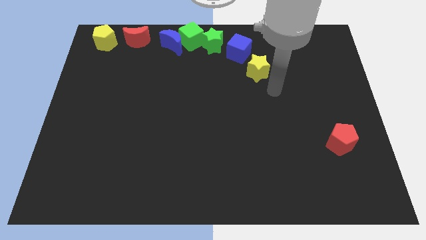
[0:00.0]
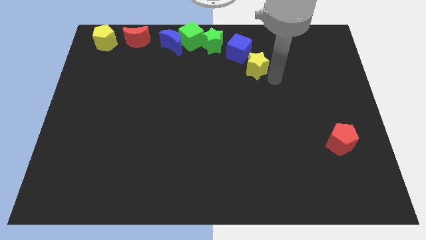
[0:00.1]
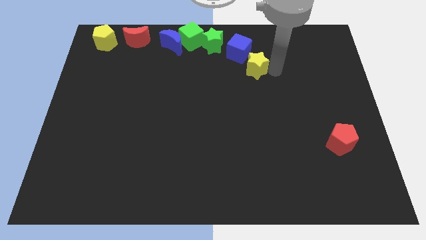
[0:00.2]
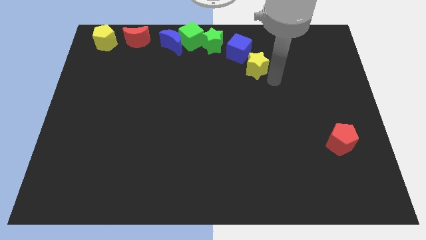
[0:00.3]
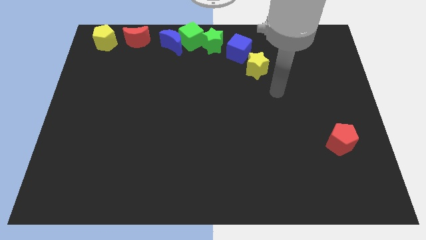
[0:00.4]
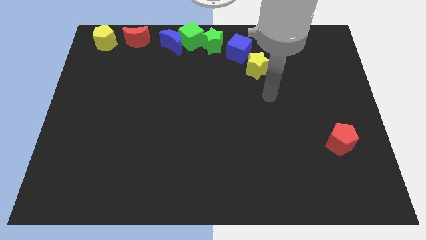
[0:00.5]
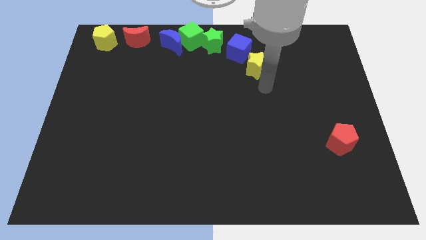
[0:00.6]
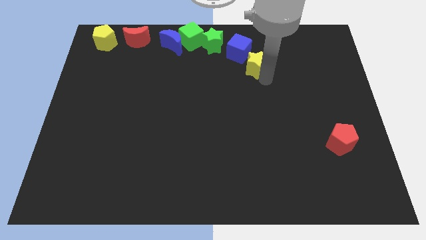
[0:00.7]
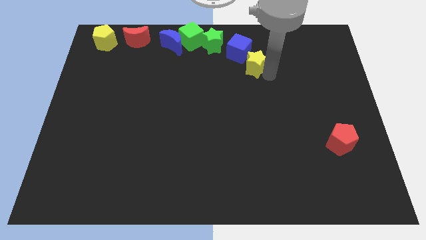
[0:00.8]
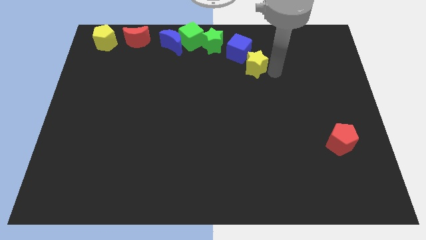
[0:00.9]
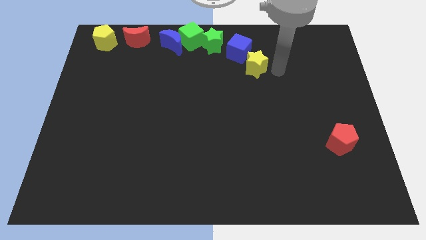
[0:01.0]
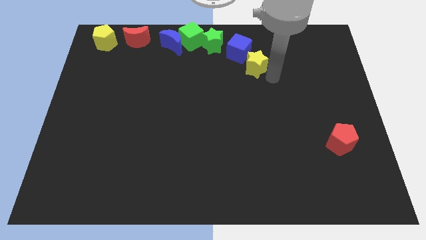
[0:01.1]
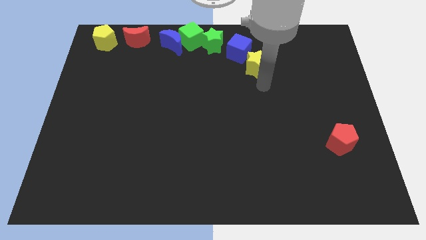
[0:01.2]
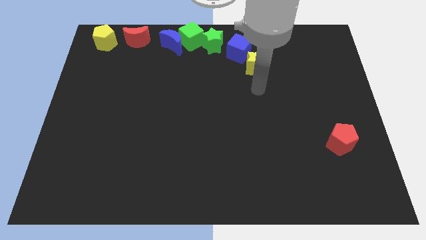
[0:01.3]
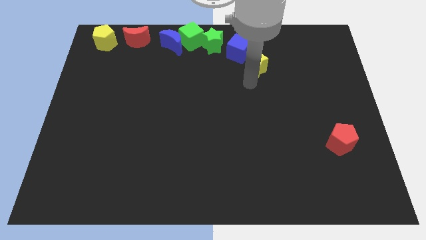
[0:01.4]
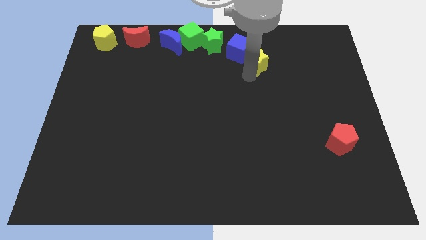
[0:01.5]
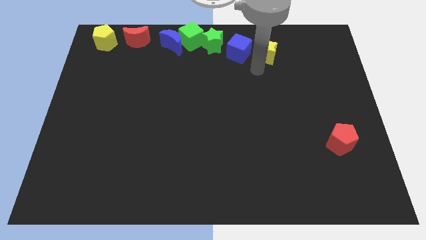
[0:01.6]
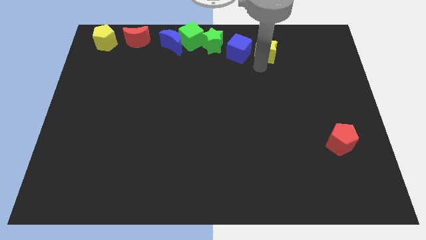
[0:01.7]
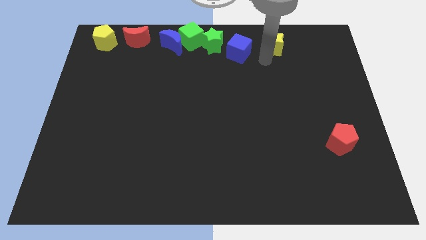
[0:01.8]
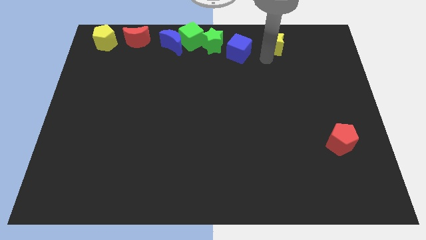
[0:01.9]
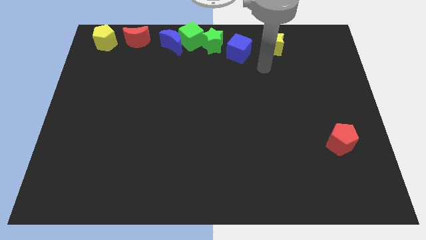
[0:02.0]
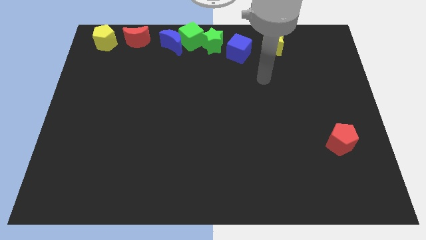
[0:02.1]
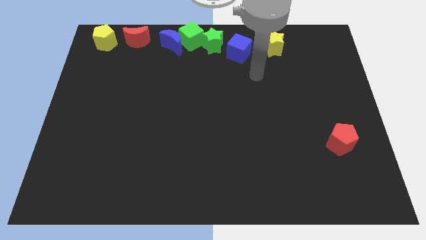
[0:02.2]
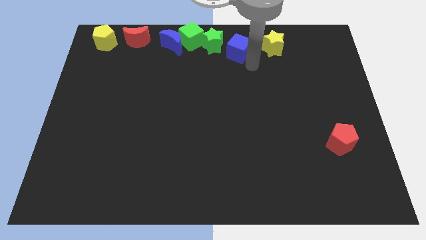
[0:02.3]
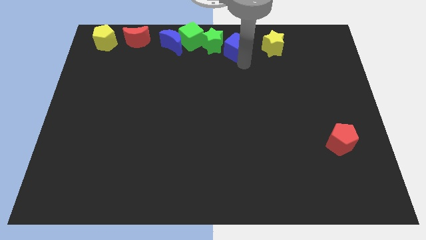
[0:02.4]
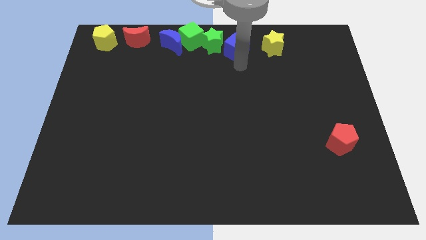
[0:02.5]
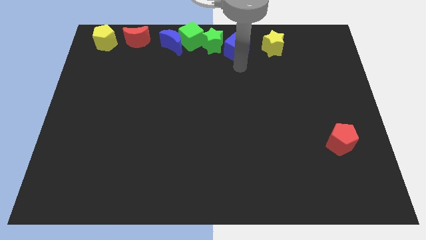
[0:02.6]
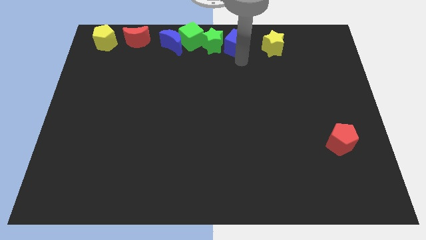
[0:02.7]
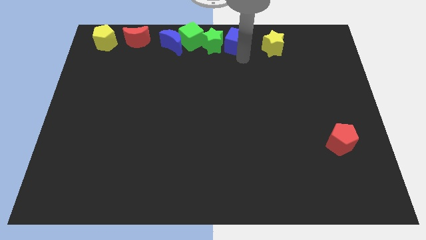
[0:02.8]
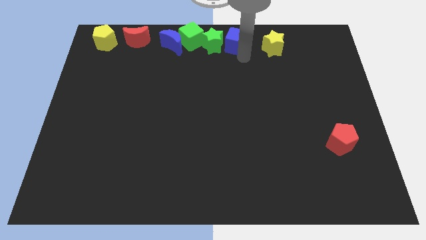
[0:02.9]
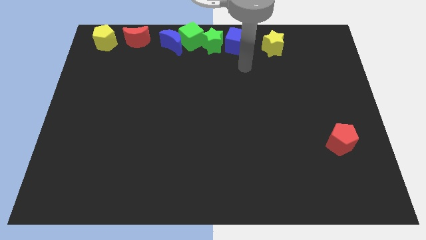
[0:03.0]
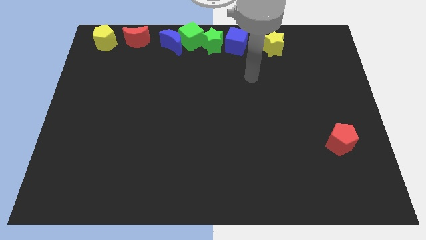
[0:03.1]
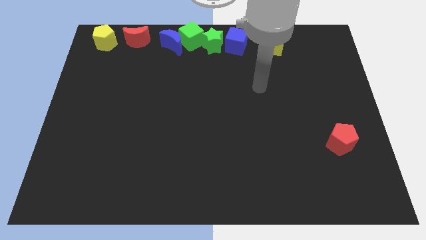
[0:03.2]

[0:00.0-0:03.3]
put the yellow star and blue cube at the right side of the green star

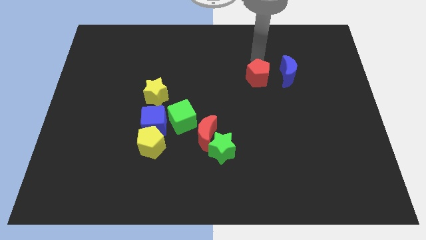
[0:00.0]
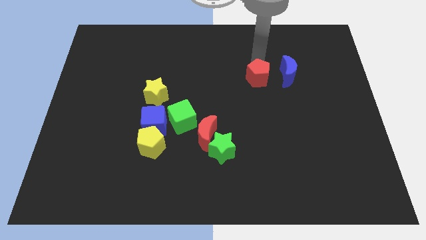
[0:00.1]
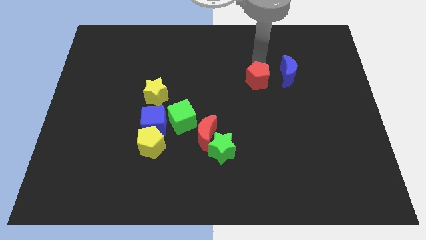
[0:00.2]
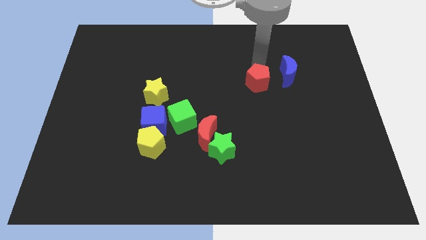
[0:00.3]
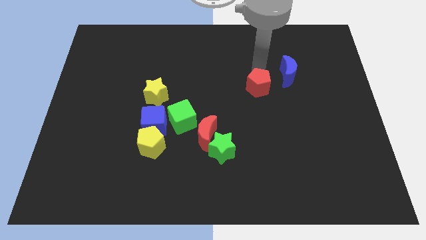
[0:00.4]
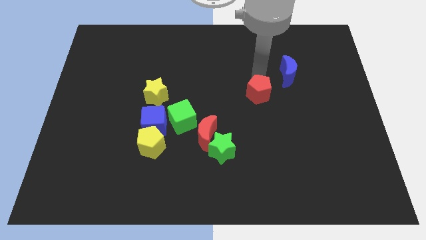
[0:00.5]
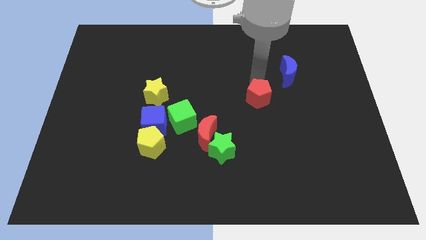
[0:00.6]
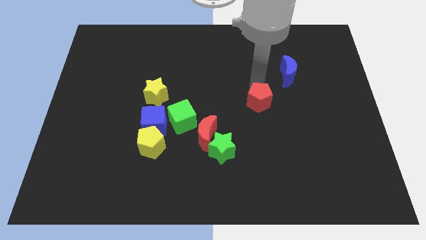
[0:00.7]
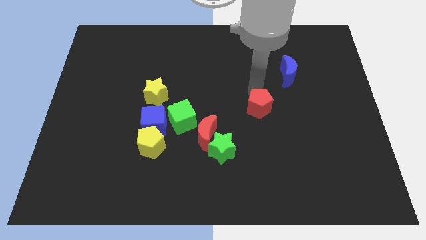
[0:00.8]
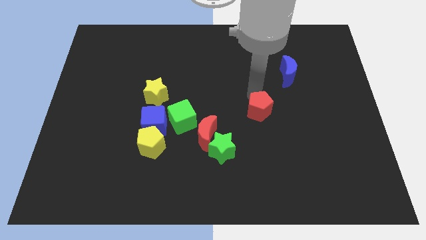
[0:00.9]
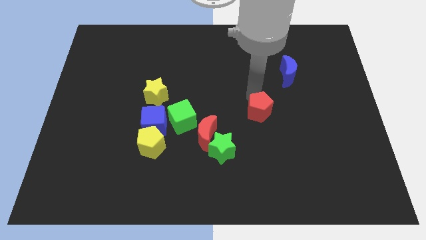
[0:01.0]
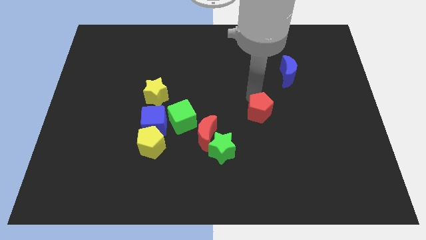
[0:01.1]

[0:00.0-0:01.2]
move the red pentagon diagonally bottom left to the blue moon

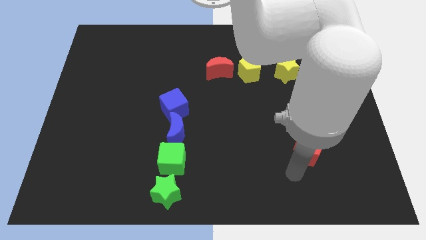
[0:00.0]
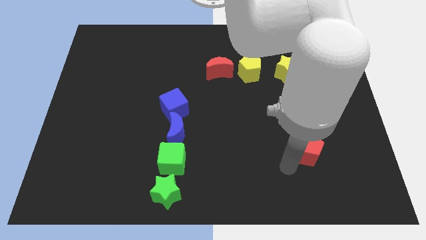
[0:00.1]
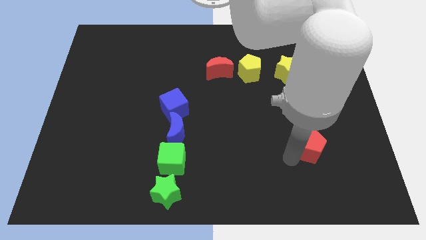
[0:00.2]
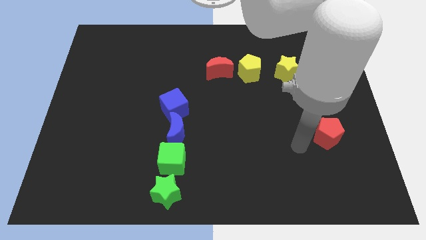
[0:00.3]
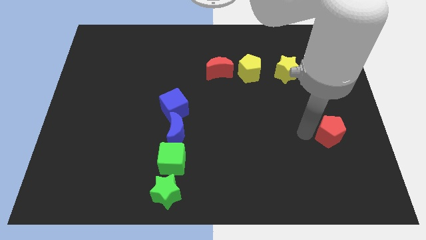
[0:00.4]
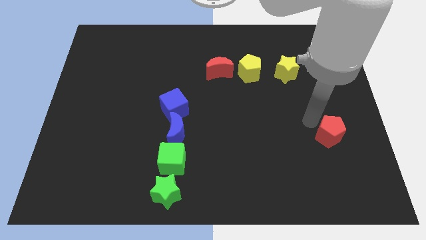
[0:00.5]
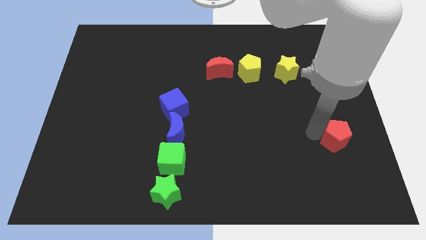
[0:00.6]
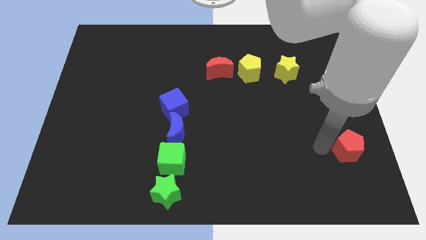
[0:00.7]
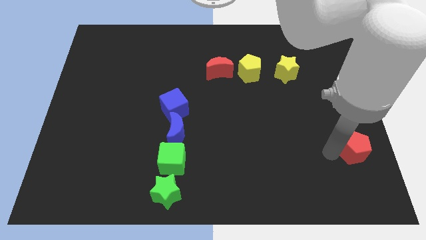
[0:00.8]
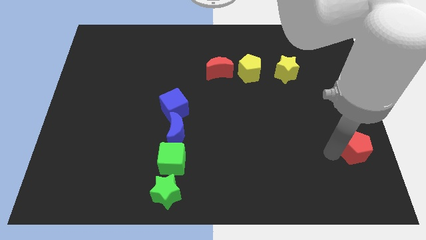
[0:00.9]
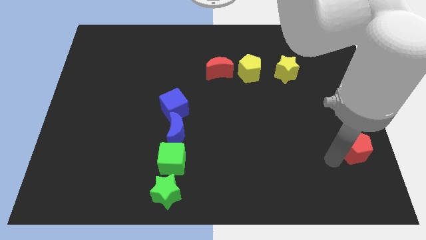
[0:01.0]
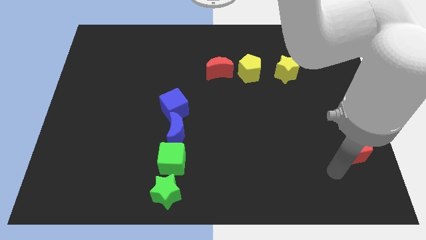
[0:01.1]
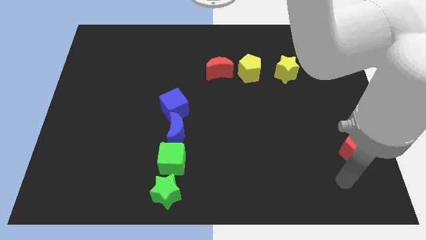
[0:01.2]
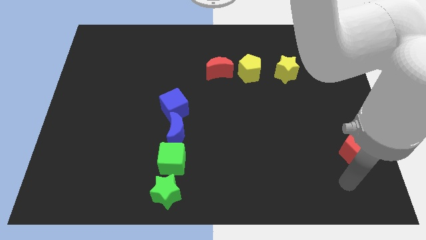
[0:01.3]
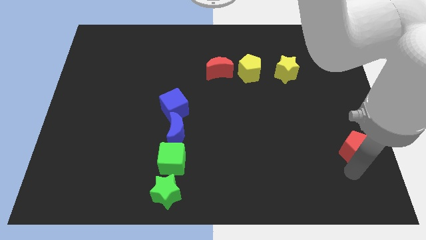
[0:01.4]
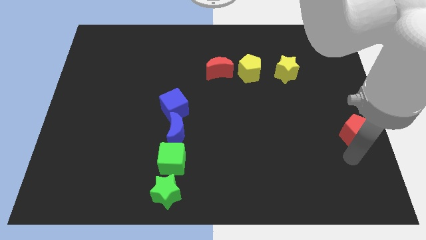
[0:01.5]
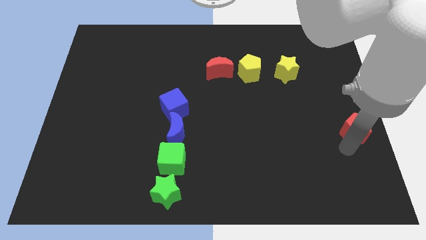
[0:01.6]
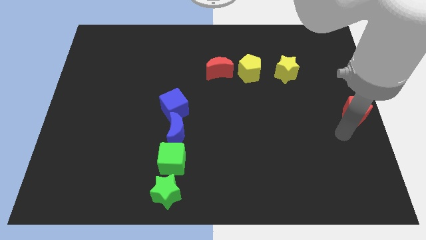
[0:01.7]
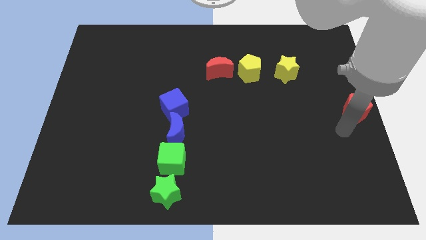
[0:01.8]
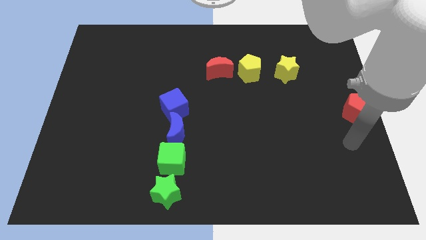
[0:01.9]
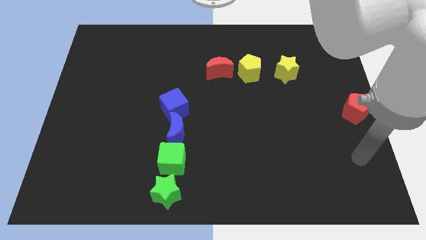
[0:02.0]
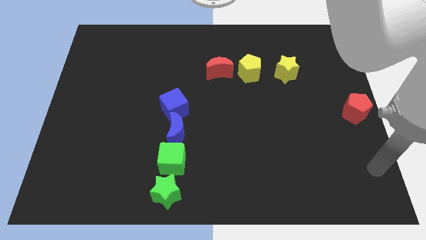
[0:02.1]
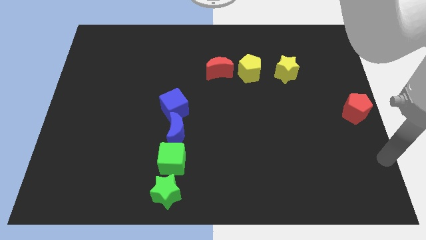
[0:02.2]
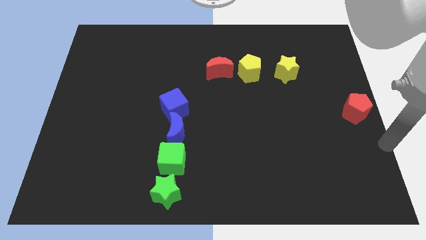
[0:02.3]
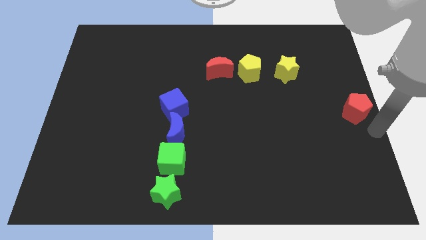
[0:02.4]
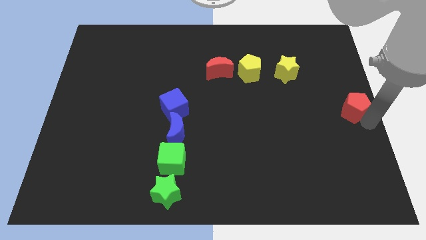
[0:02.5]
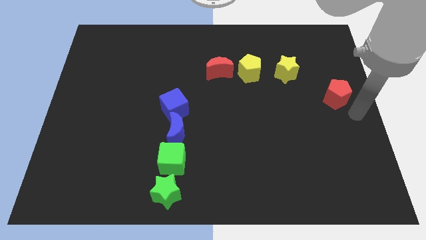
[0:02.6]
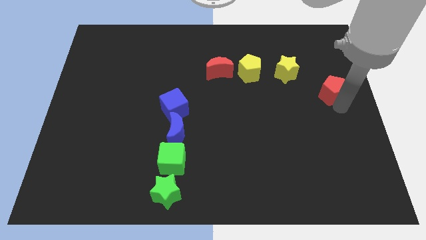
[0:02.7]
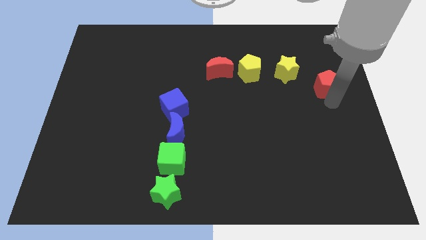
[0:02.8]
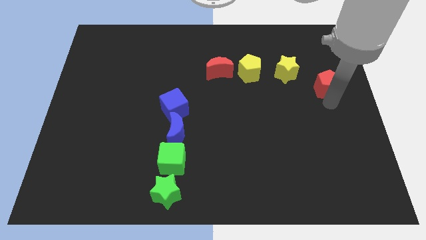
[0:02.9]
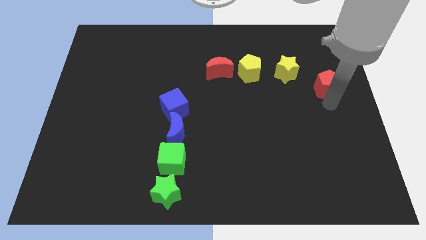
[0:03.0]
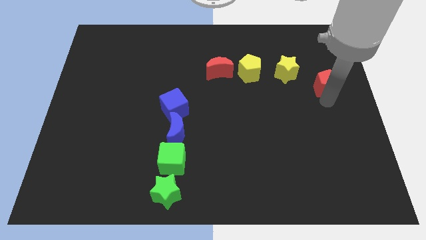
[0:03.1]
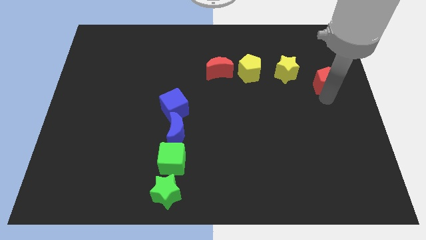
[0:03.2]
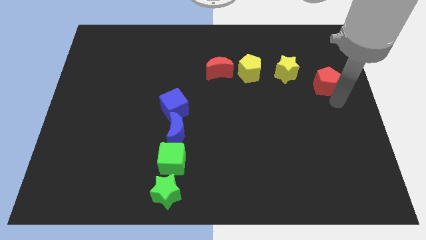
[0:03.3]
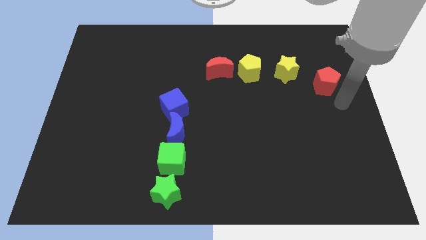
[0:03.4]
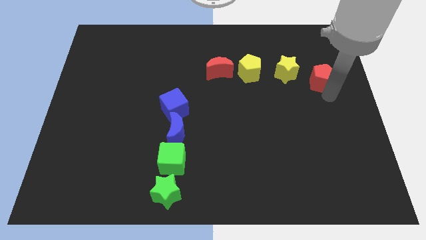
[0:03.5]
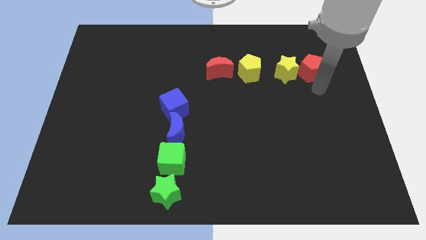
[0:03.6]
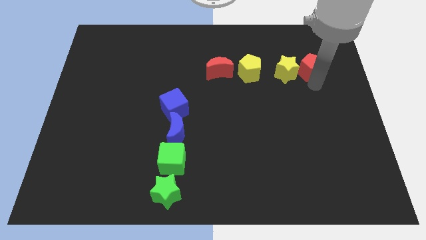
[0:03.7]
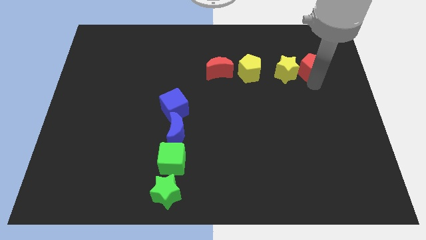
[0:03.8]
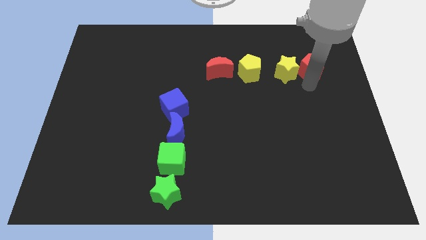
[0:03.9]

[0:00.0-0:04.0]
put the red pentagon to the right of the yellow star

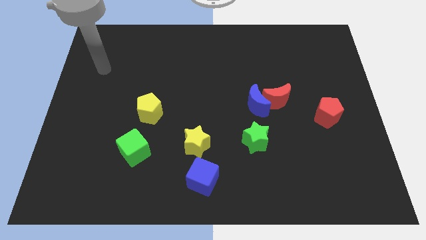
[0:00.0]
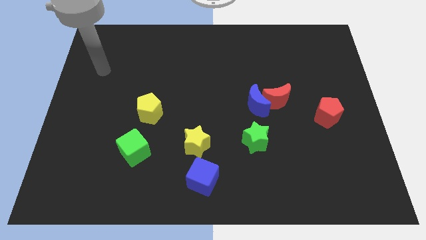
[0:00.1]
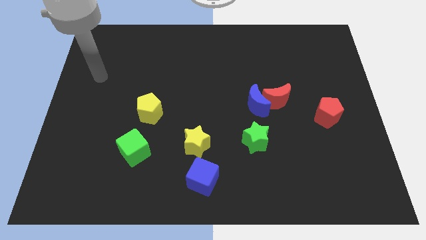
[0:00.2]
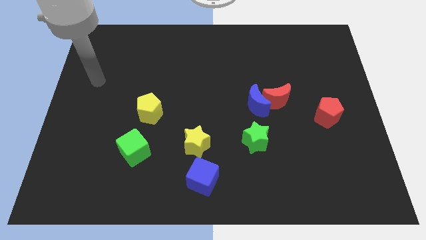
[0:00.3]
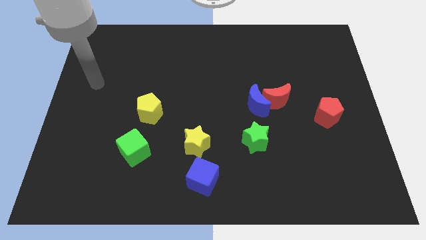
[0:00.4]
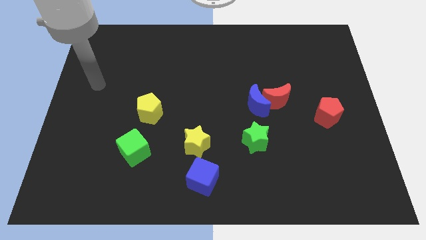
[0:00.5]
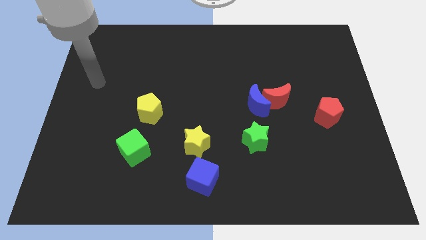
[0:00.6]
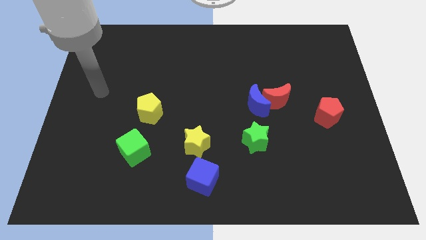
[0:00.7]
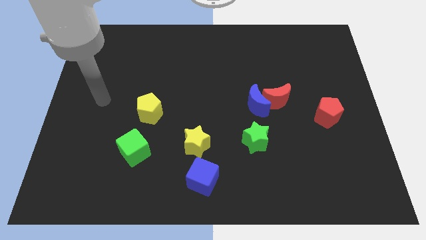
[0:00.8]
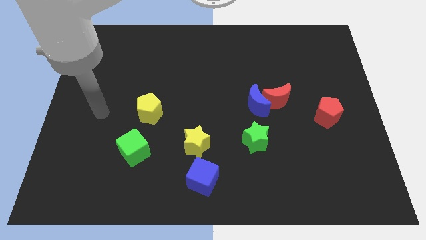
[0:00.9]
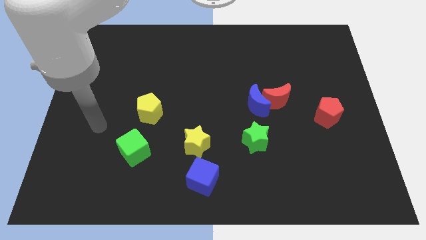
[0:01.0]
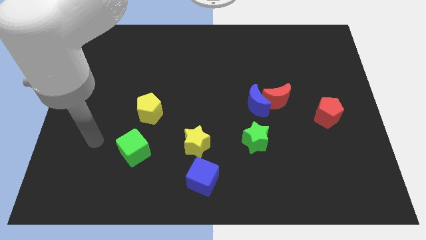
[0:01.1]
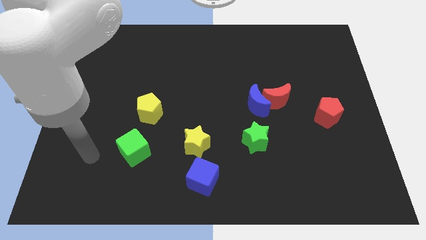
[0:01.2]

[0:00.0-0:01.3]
point your arm to the left side of green cube
